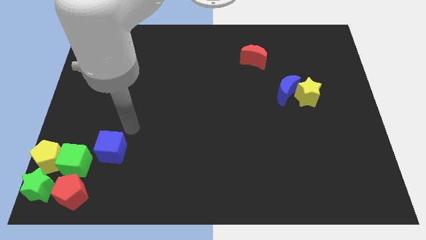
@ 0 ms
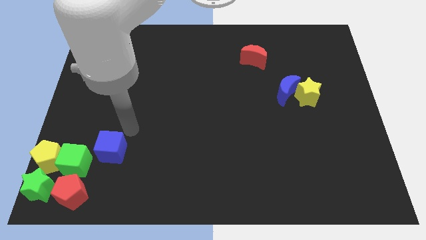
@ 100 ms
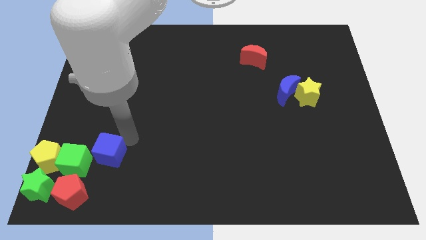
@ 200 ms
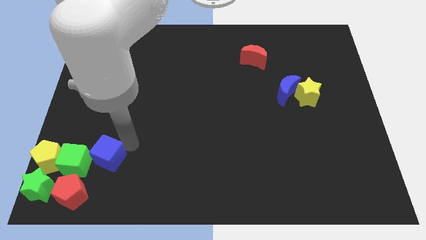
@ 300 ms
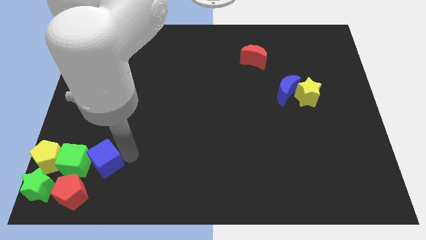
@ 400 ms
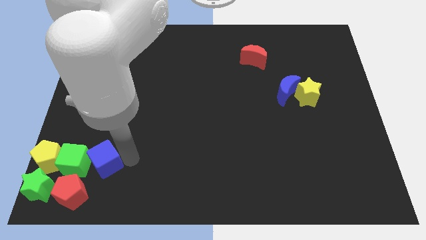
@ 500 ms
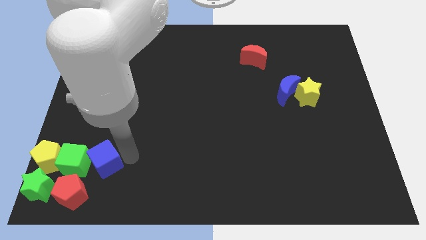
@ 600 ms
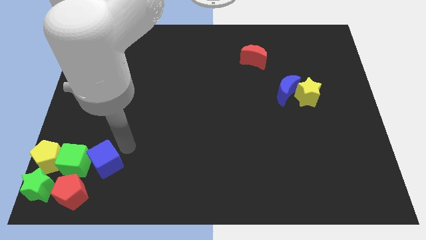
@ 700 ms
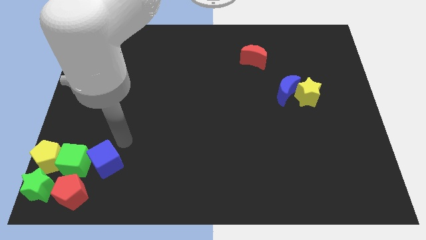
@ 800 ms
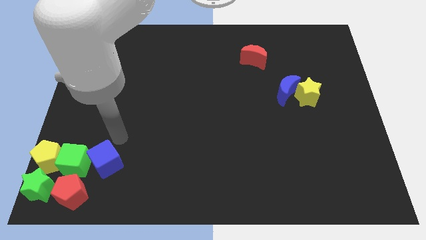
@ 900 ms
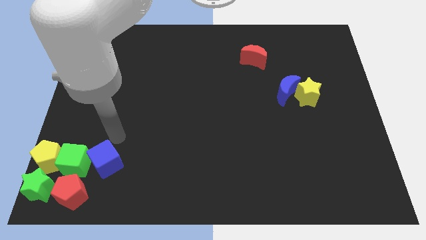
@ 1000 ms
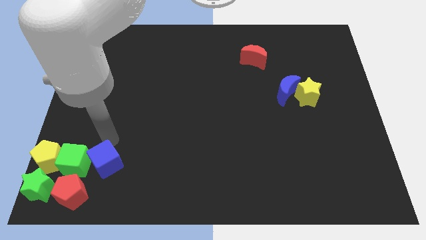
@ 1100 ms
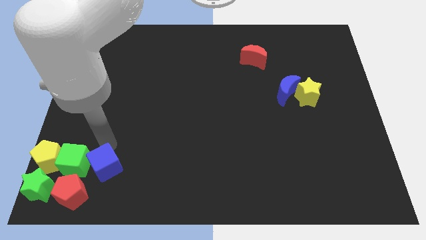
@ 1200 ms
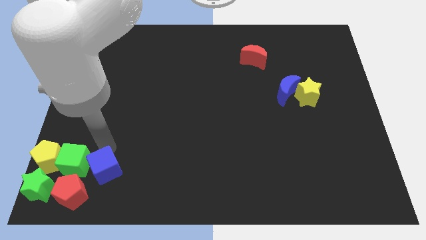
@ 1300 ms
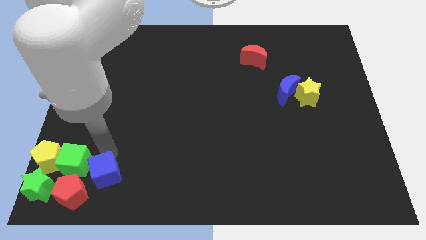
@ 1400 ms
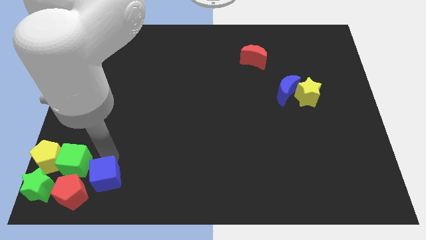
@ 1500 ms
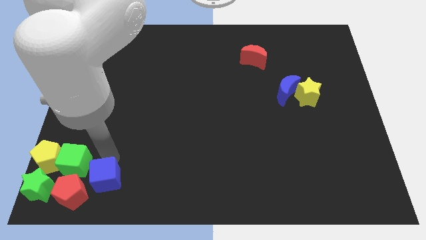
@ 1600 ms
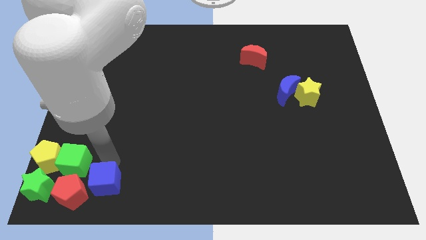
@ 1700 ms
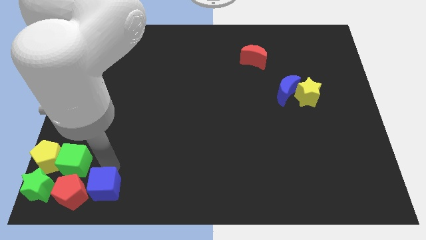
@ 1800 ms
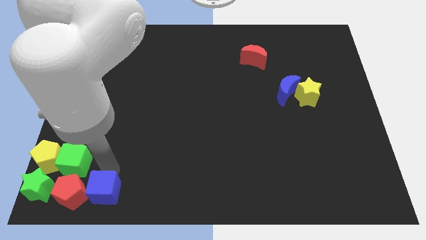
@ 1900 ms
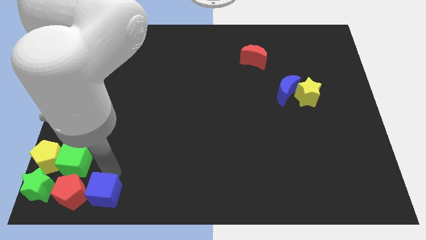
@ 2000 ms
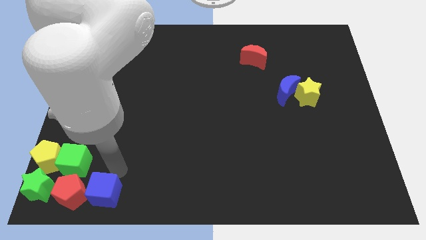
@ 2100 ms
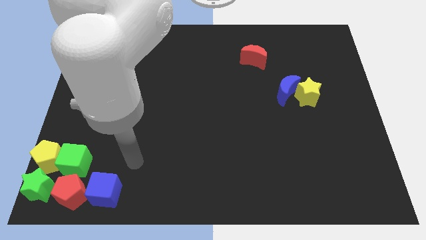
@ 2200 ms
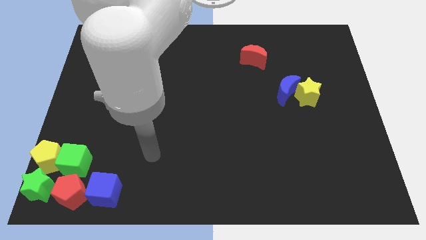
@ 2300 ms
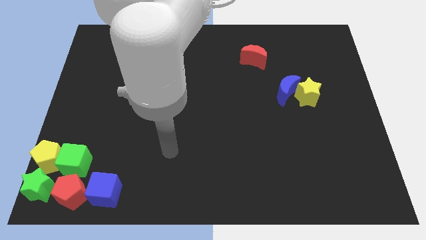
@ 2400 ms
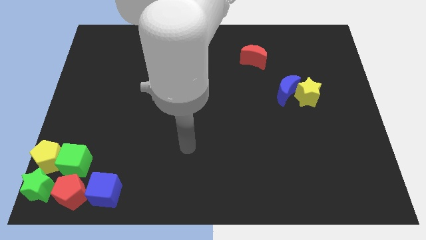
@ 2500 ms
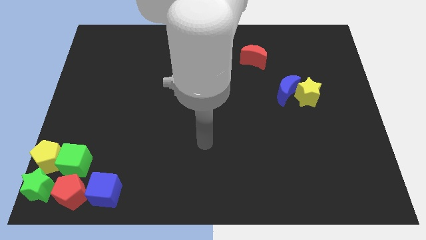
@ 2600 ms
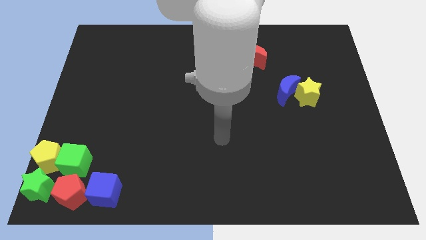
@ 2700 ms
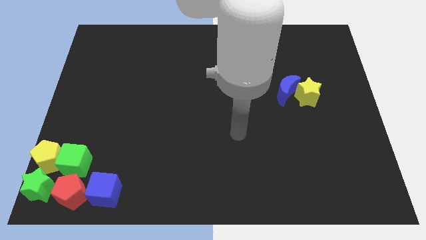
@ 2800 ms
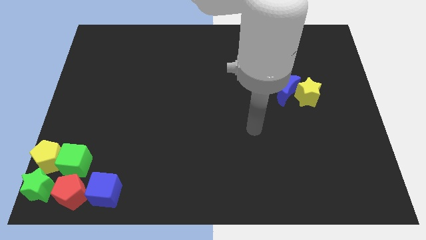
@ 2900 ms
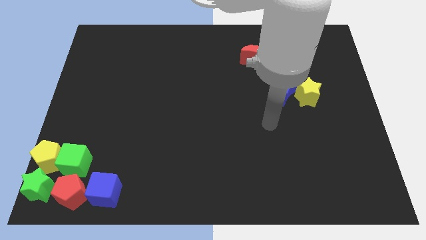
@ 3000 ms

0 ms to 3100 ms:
move the blue cube to the right of the red pentagon

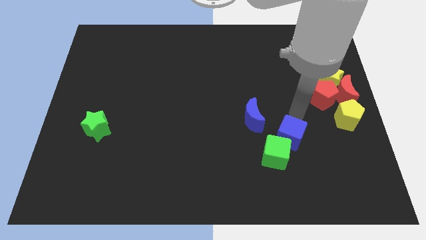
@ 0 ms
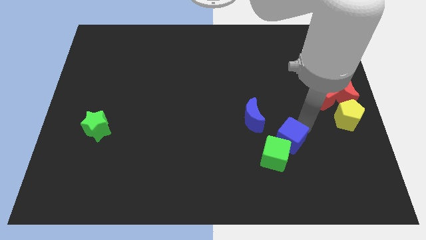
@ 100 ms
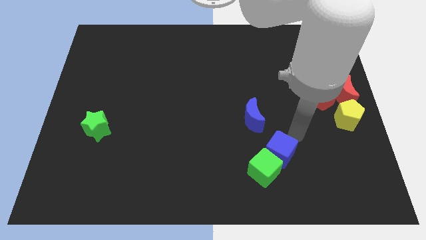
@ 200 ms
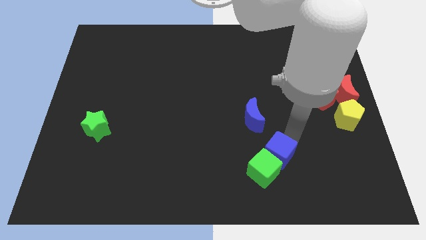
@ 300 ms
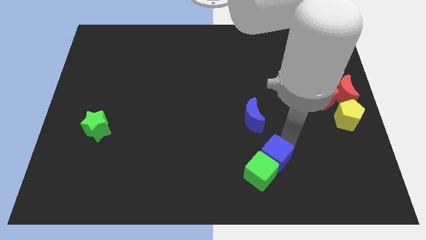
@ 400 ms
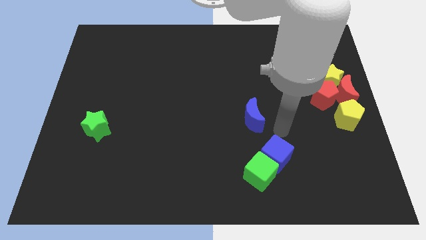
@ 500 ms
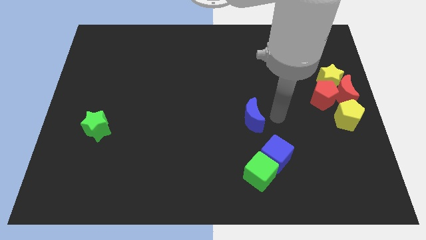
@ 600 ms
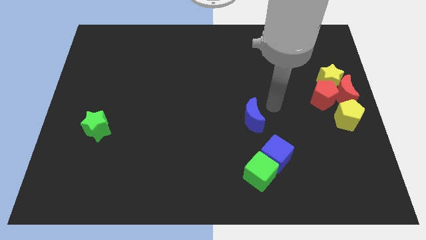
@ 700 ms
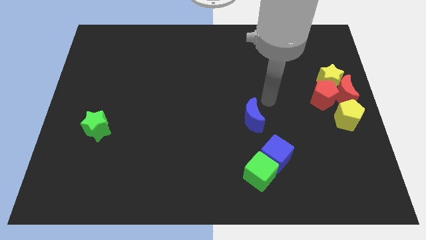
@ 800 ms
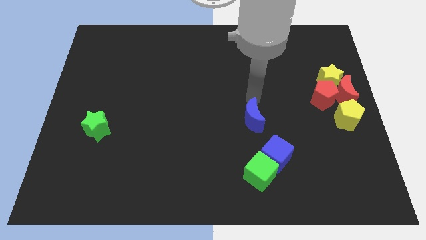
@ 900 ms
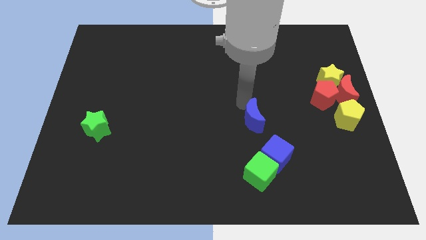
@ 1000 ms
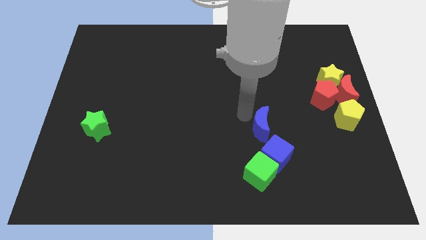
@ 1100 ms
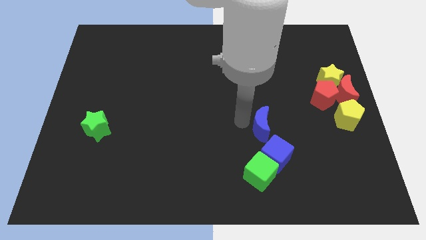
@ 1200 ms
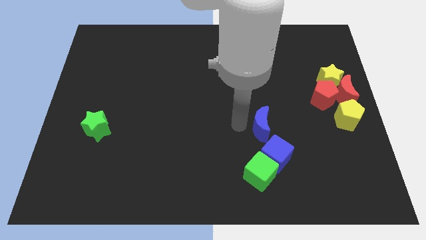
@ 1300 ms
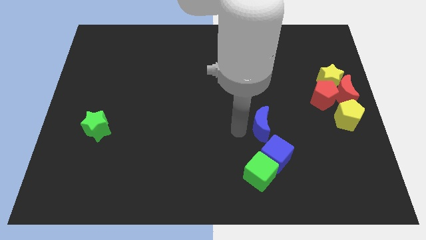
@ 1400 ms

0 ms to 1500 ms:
move the blue blocks and green cube towards the bottom side of the board

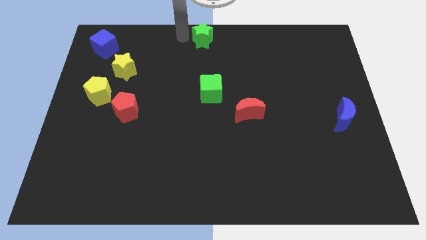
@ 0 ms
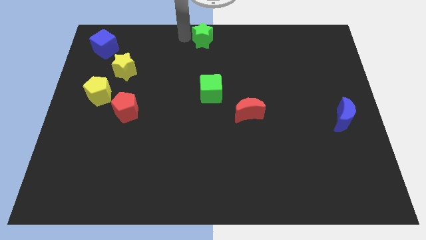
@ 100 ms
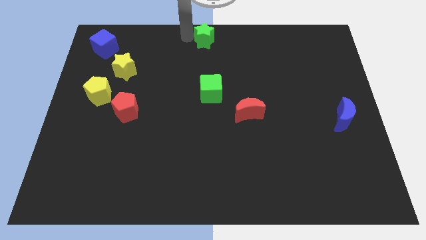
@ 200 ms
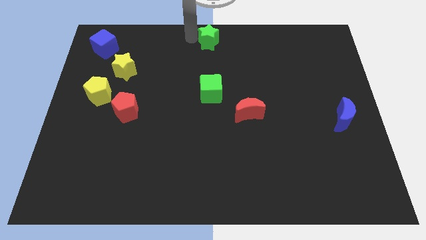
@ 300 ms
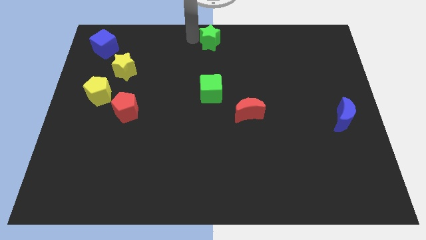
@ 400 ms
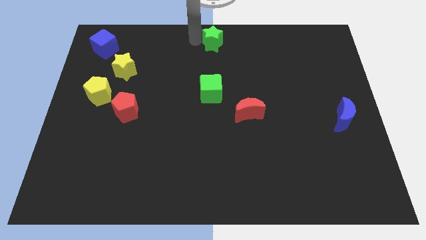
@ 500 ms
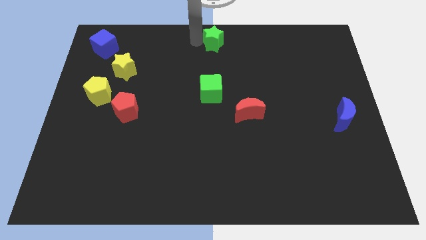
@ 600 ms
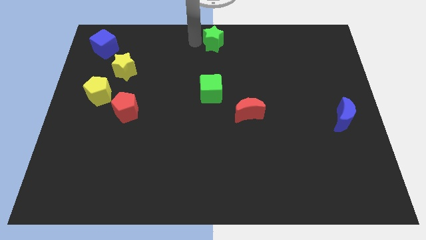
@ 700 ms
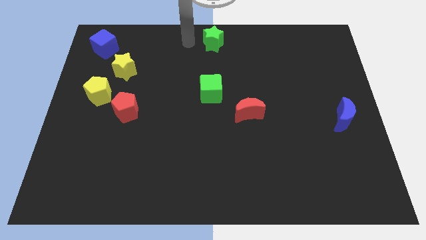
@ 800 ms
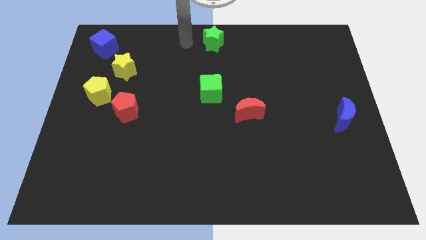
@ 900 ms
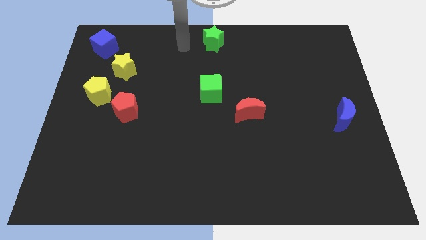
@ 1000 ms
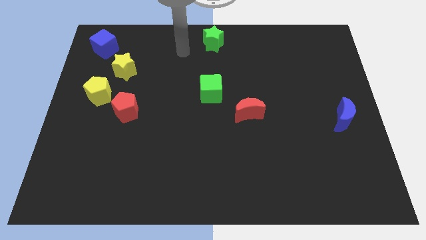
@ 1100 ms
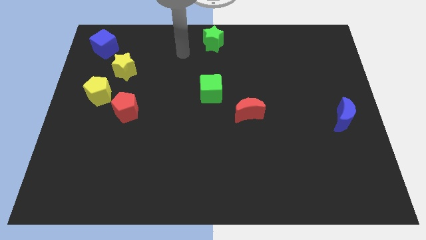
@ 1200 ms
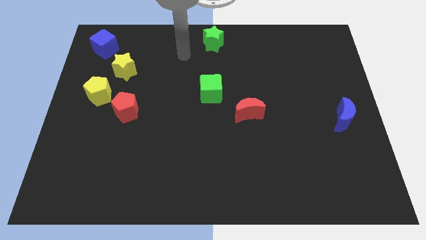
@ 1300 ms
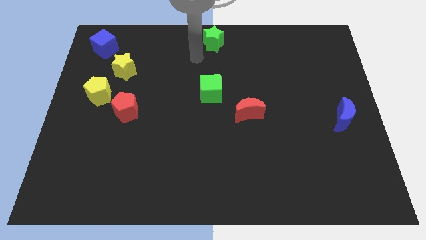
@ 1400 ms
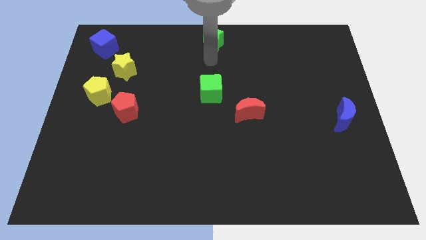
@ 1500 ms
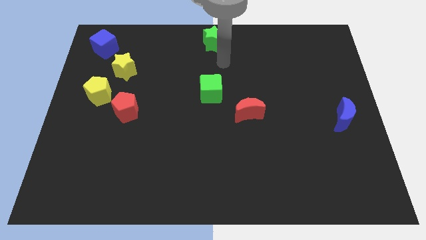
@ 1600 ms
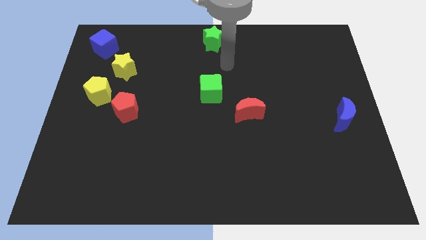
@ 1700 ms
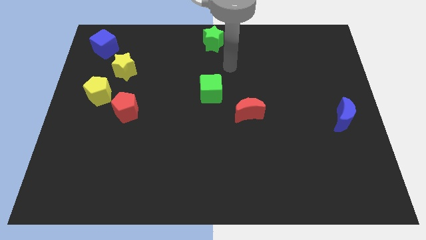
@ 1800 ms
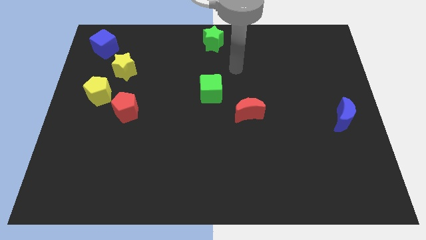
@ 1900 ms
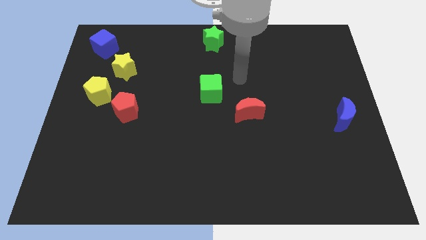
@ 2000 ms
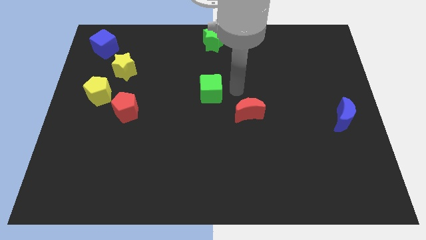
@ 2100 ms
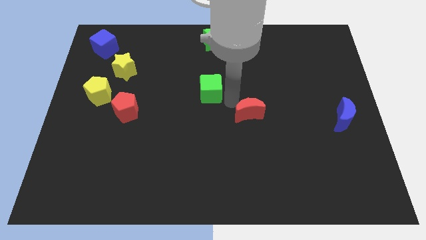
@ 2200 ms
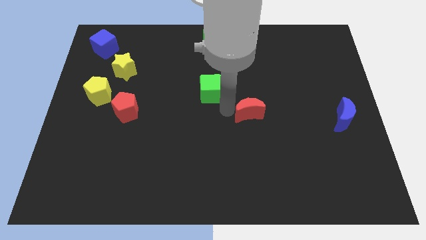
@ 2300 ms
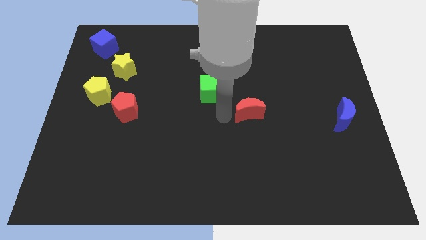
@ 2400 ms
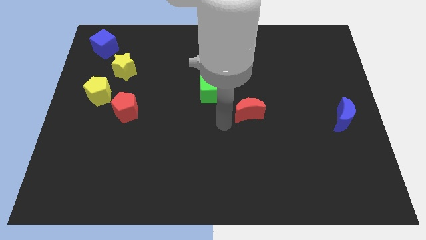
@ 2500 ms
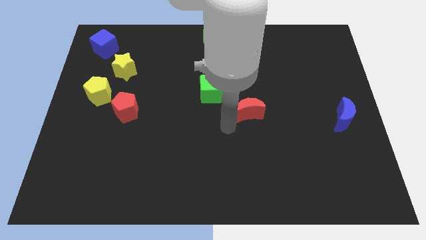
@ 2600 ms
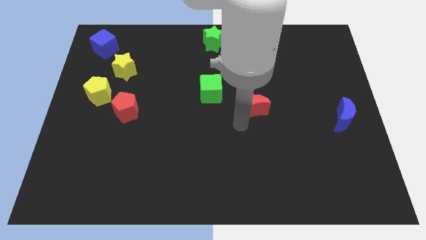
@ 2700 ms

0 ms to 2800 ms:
move arm near red moon

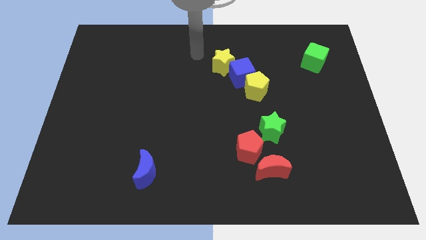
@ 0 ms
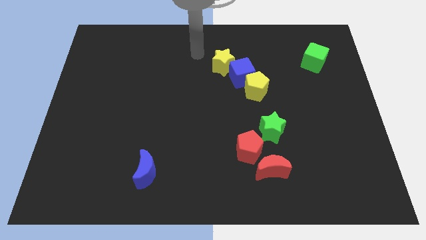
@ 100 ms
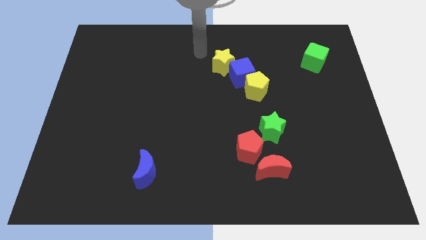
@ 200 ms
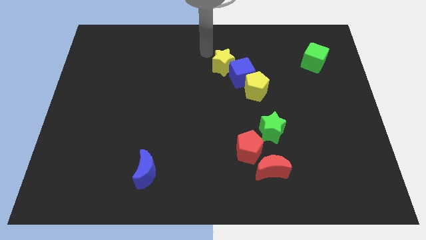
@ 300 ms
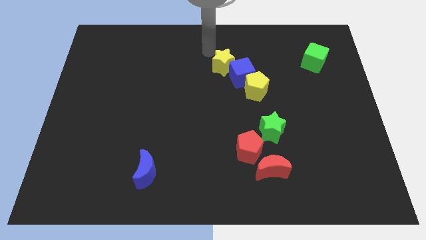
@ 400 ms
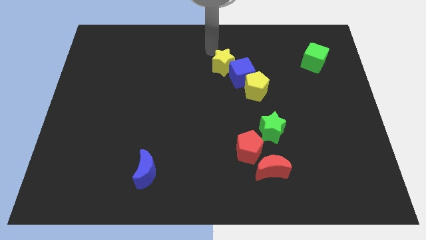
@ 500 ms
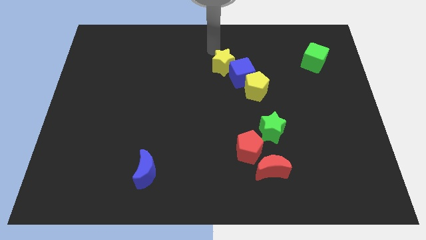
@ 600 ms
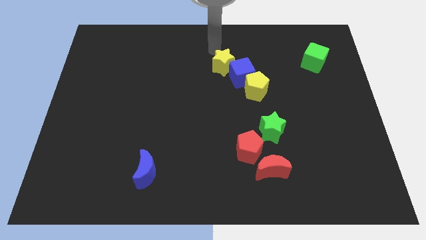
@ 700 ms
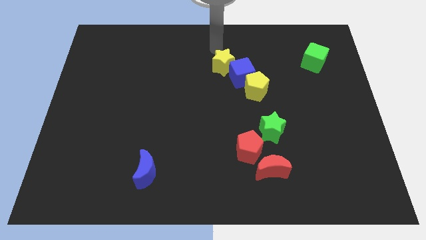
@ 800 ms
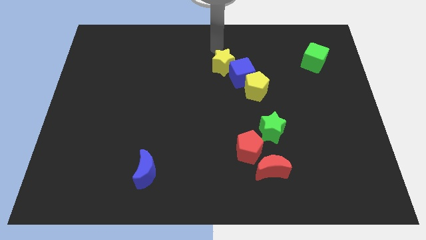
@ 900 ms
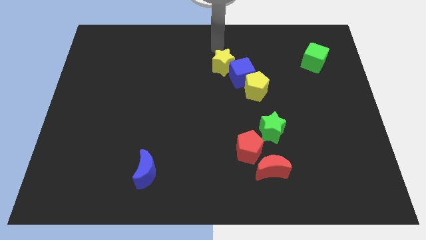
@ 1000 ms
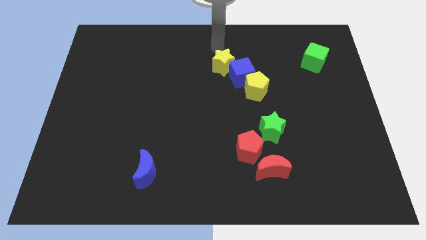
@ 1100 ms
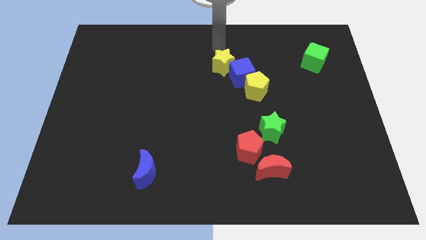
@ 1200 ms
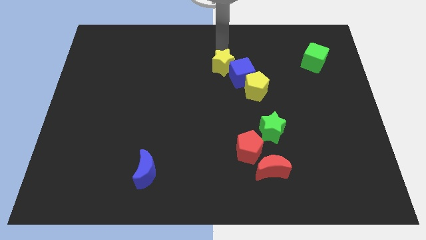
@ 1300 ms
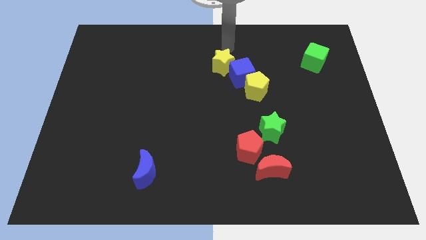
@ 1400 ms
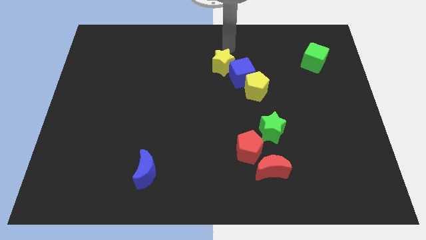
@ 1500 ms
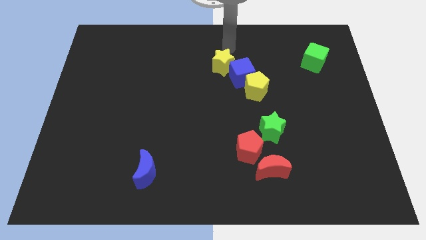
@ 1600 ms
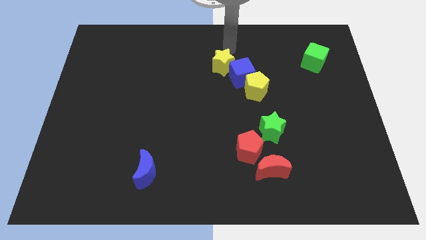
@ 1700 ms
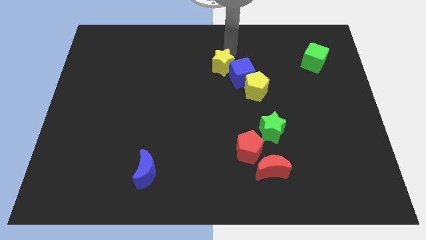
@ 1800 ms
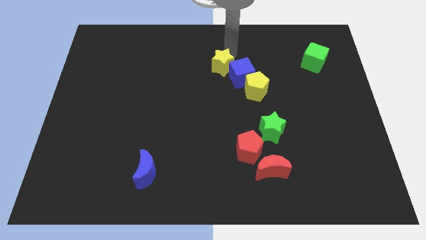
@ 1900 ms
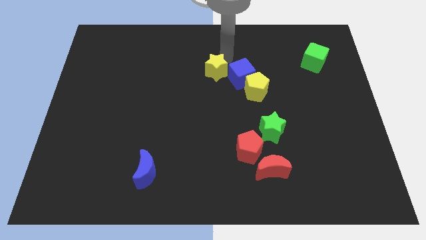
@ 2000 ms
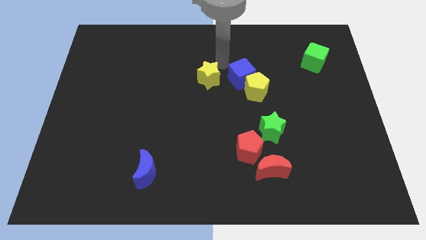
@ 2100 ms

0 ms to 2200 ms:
place the yellow star to the top left of the blue cube
